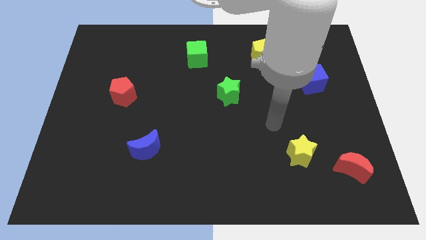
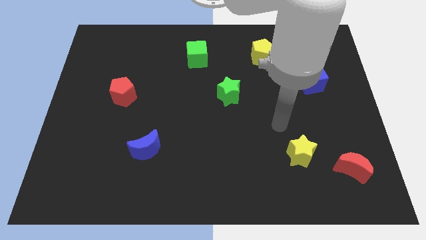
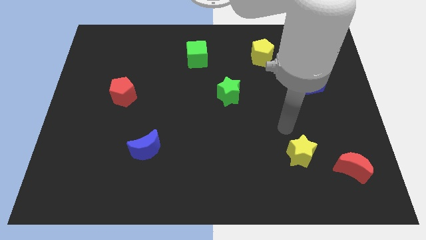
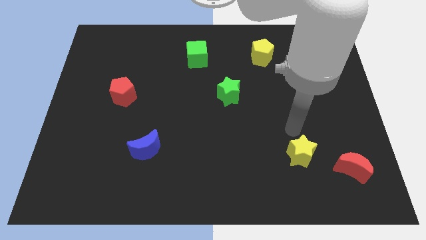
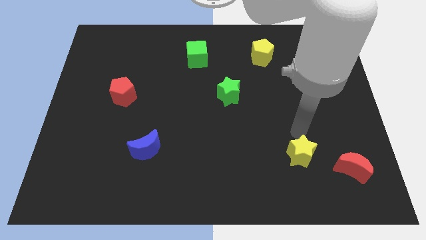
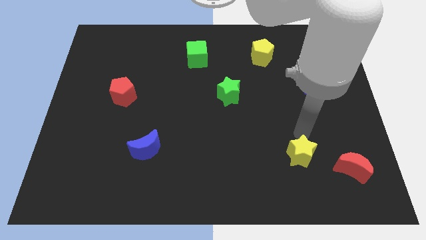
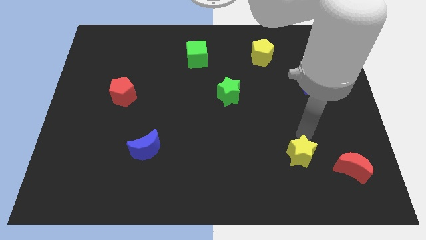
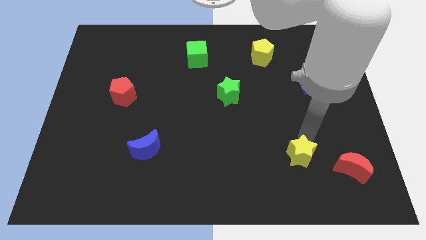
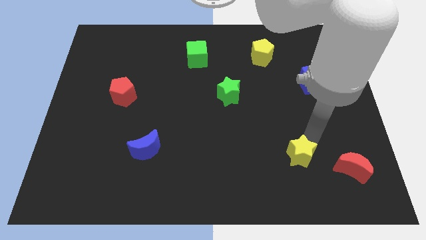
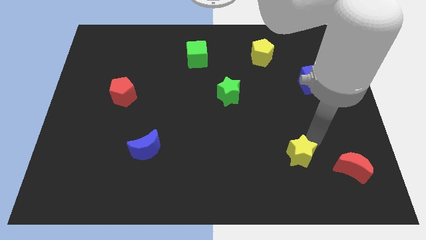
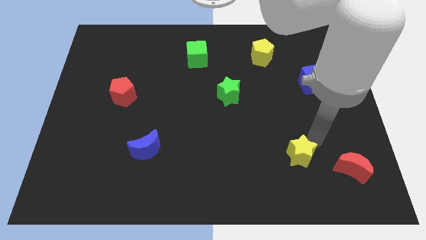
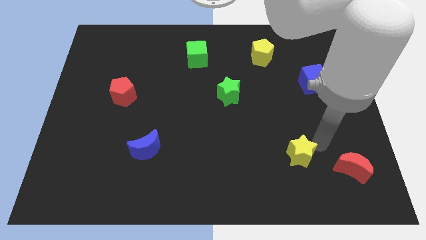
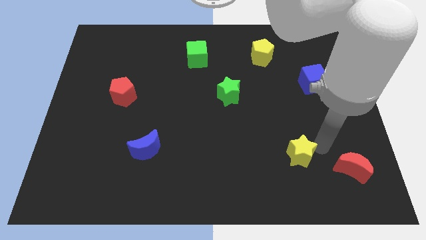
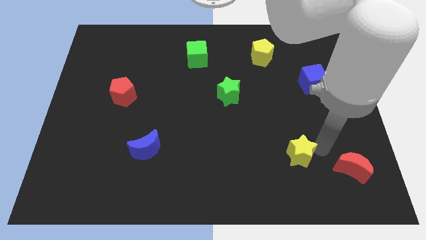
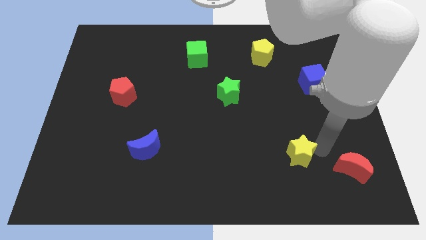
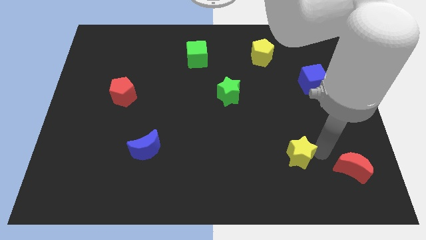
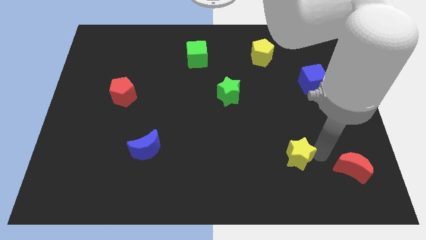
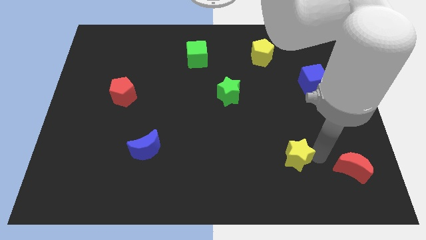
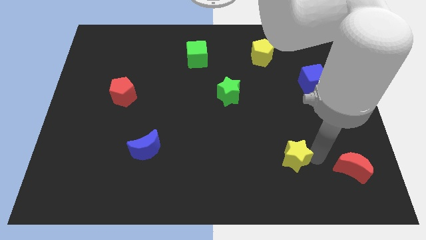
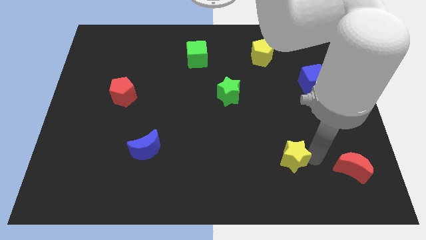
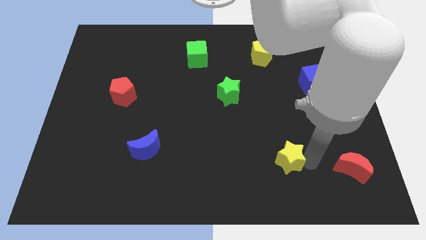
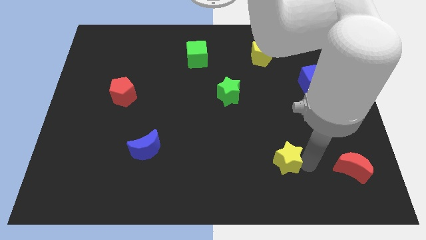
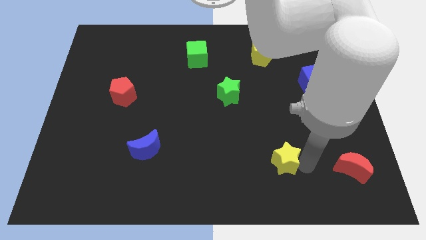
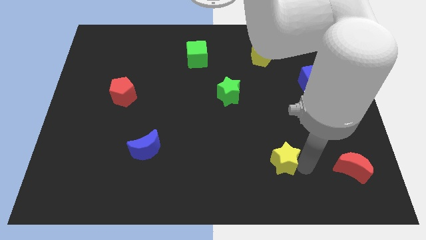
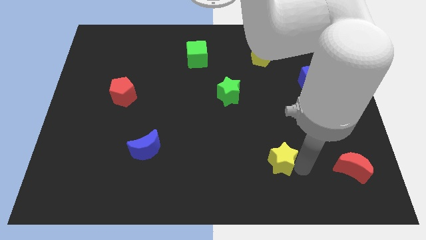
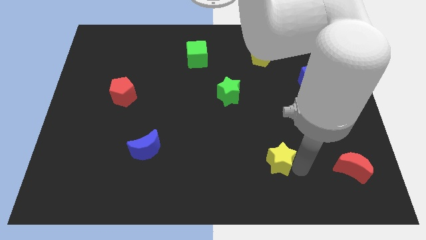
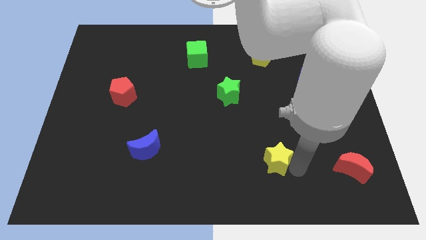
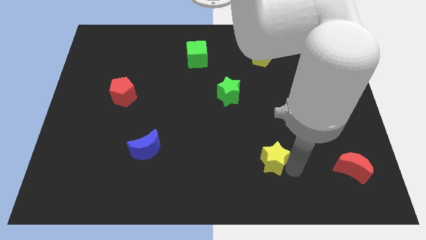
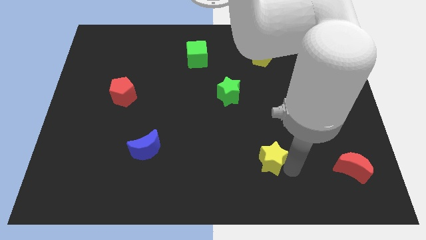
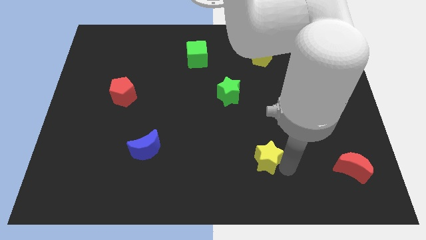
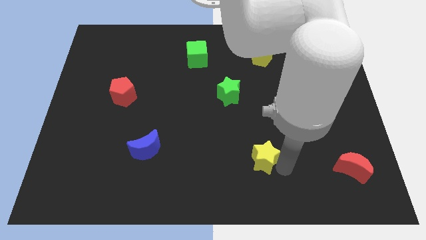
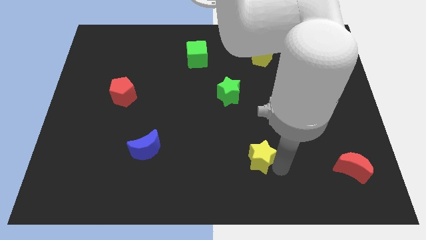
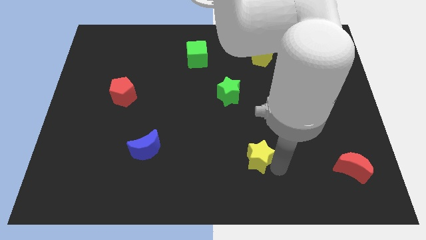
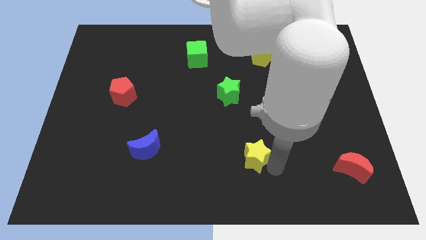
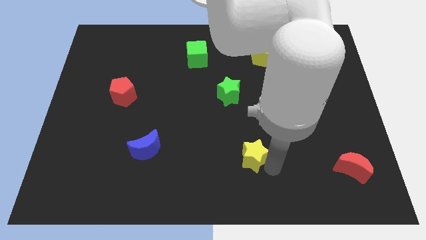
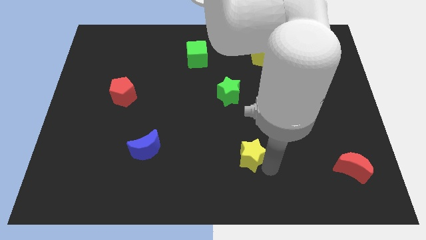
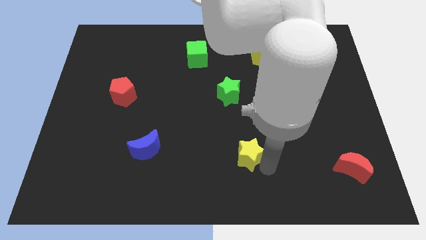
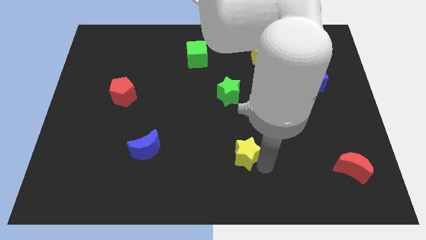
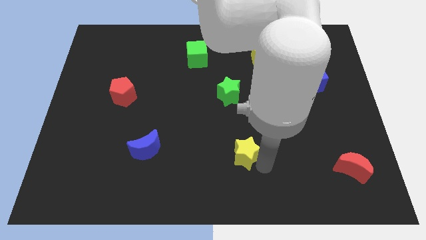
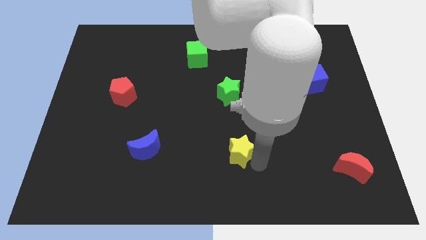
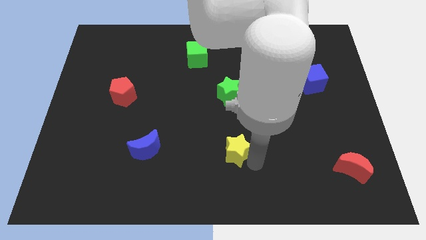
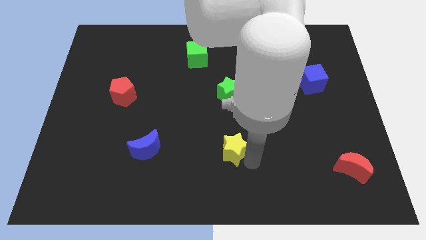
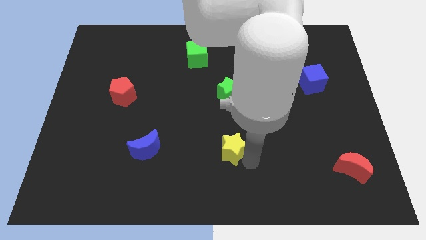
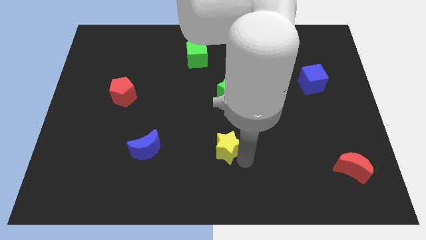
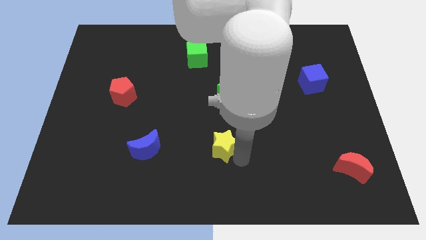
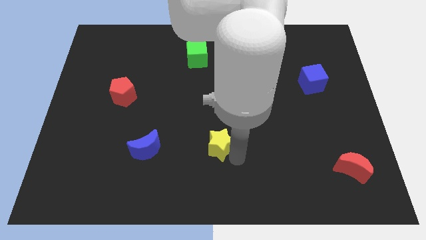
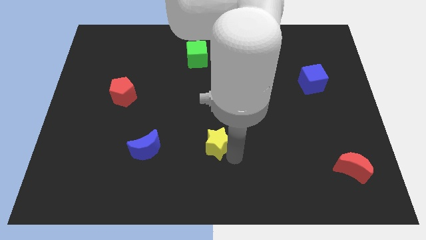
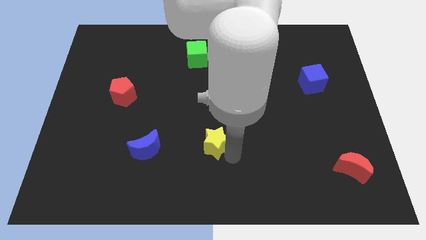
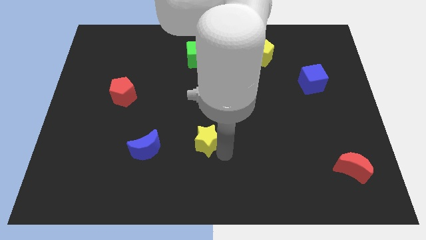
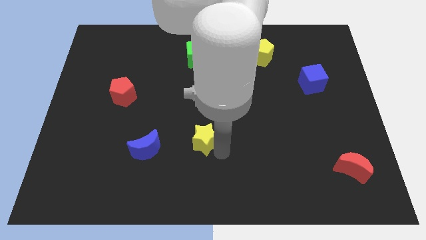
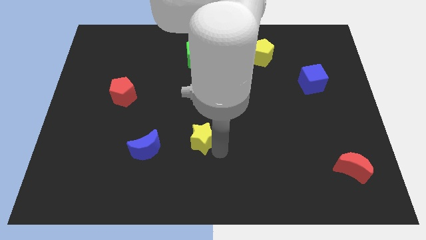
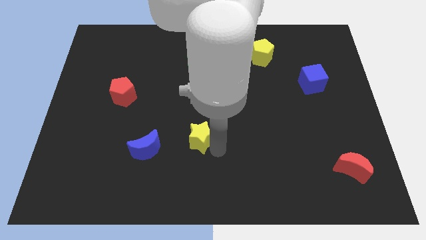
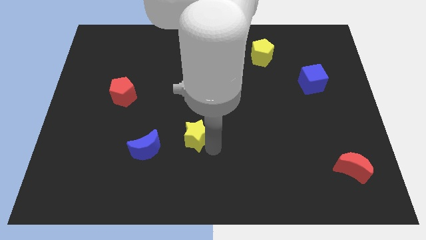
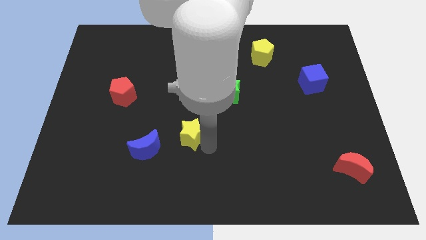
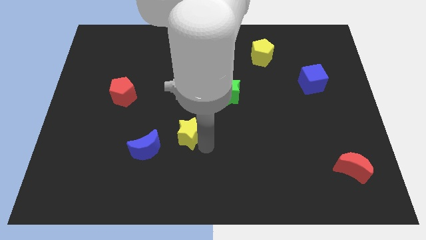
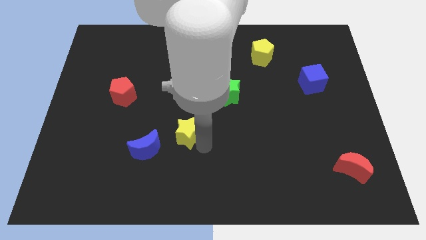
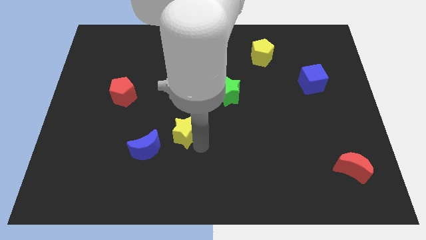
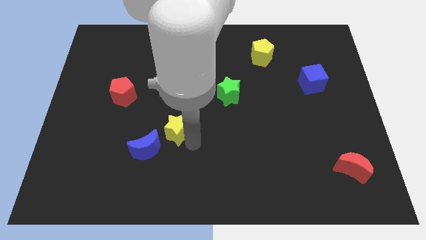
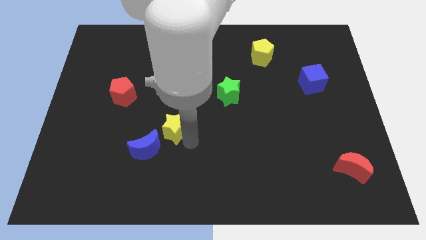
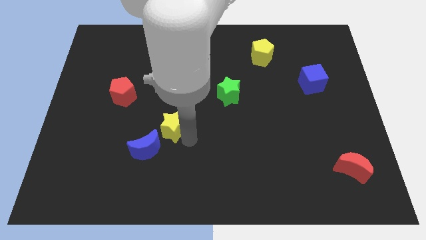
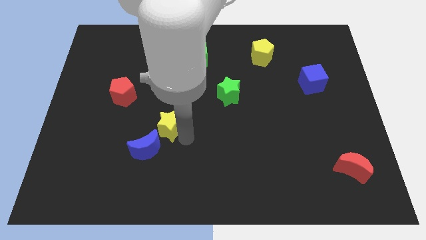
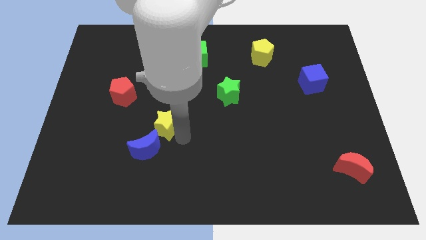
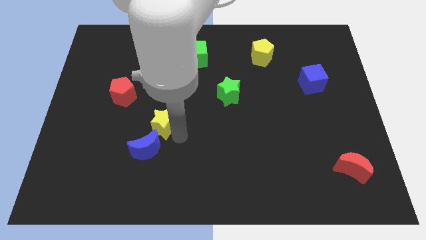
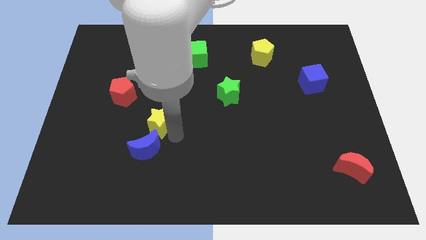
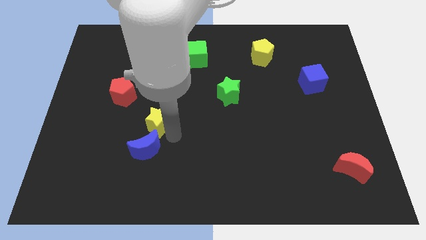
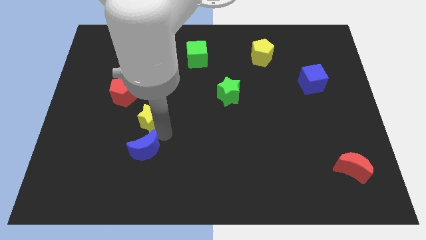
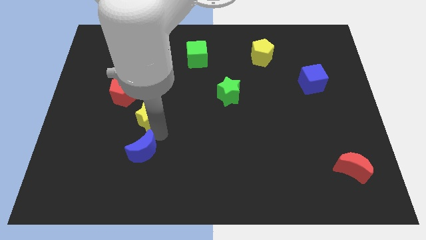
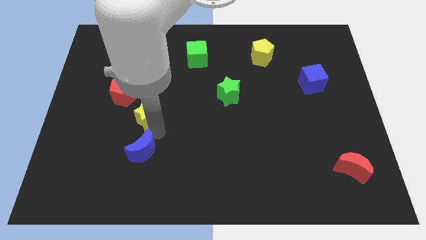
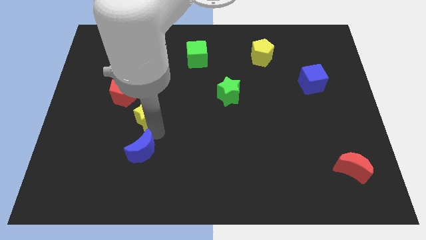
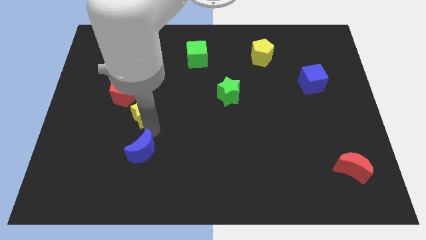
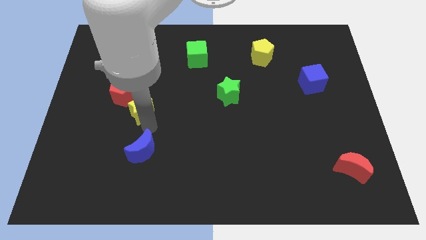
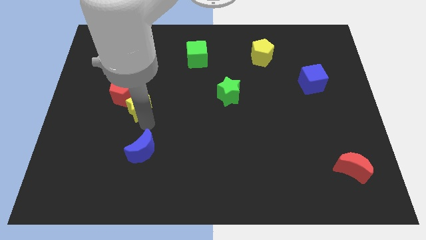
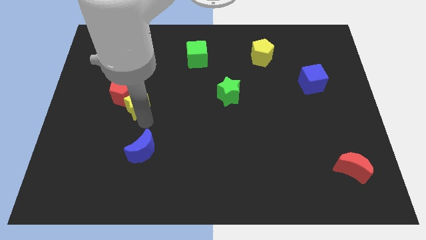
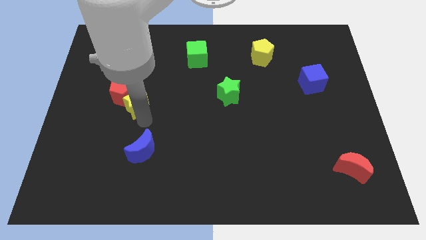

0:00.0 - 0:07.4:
push the yellow star close to the red pentagon

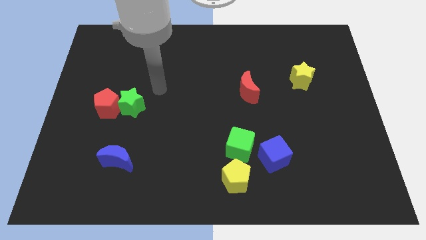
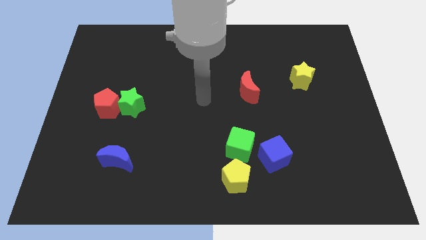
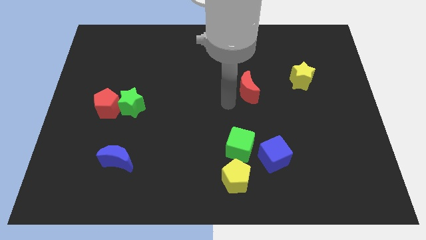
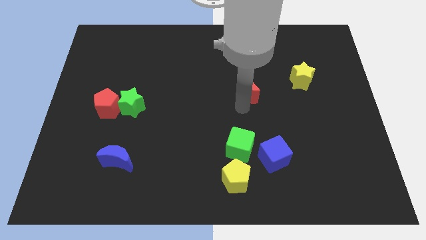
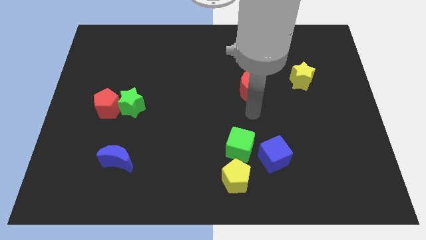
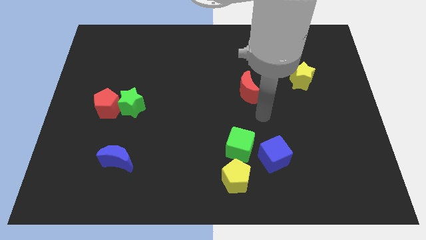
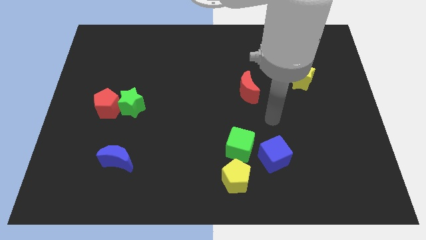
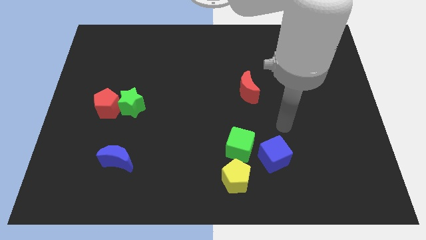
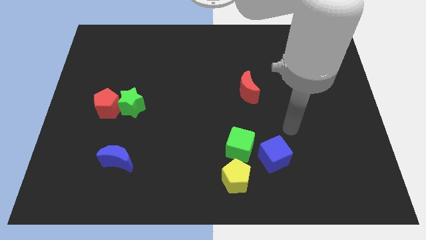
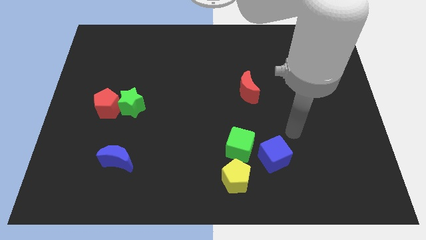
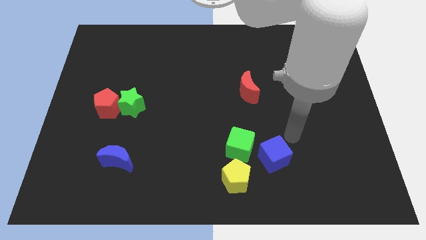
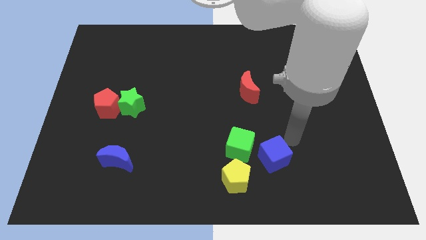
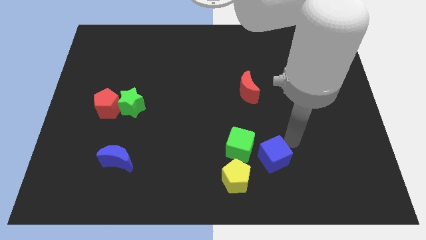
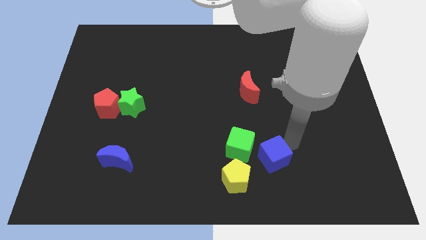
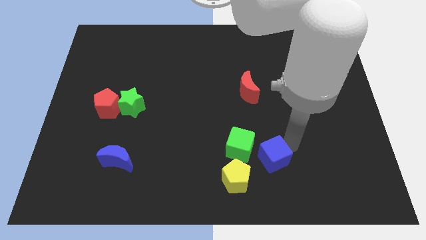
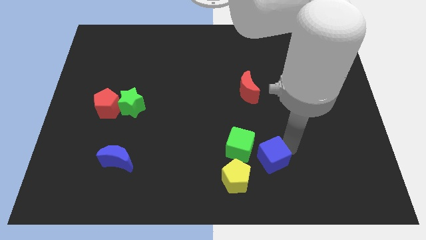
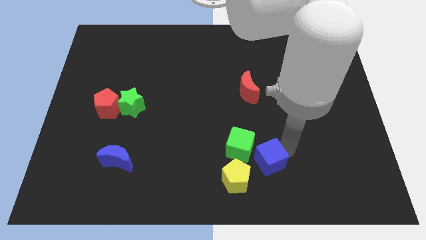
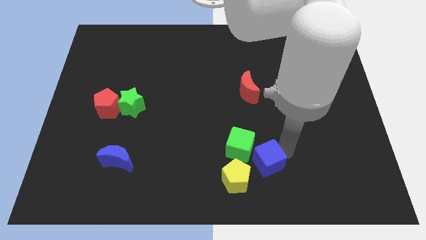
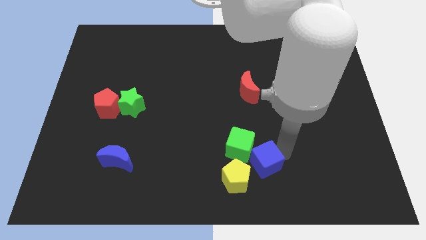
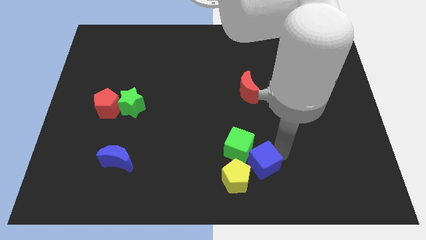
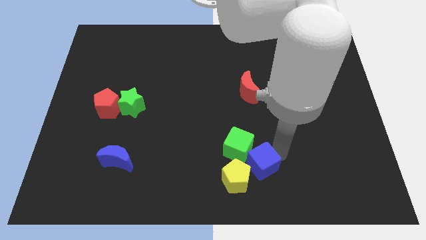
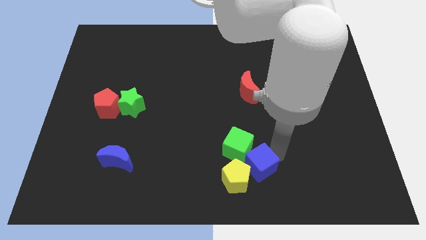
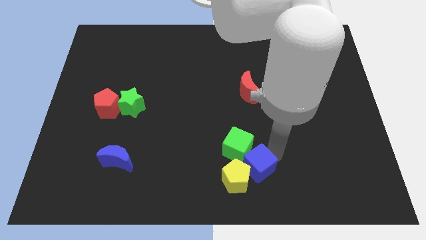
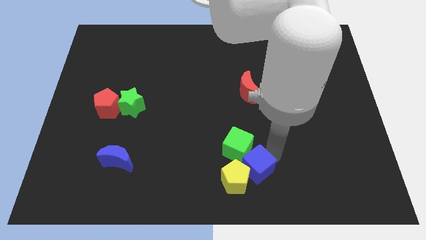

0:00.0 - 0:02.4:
push the blue cube to the yellow pentagon
